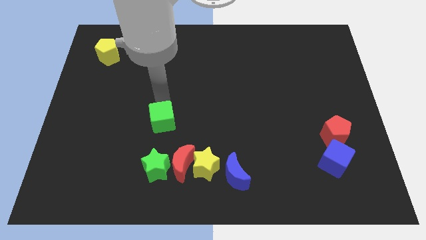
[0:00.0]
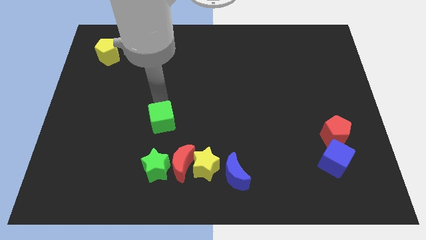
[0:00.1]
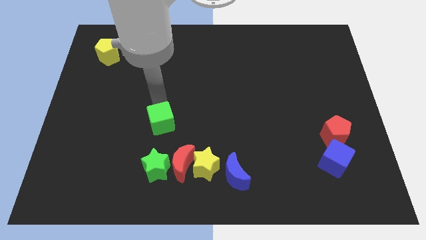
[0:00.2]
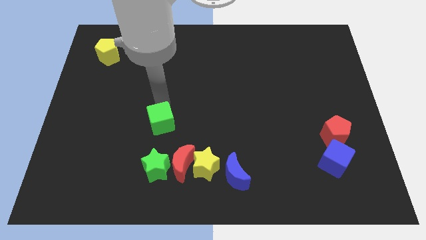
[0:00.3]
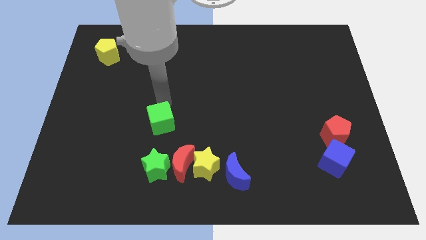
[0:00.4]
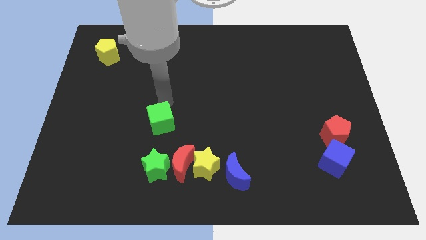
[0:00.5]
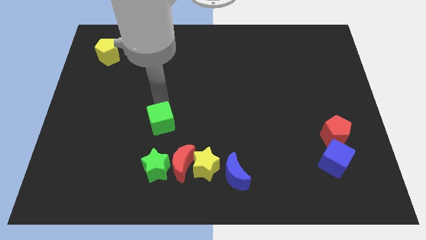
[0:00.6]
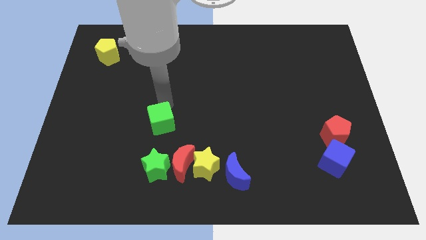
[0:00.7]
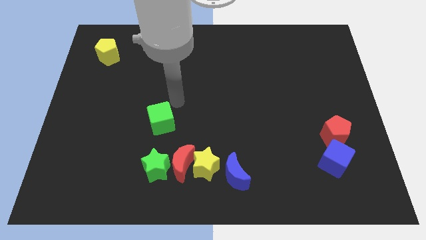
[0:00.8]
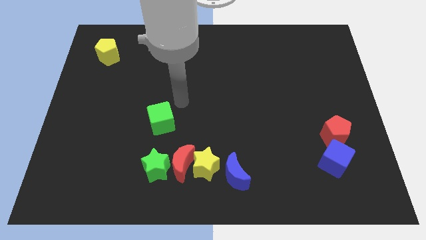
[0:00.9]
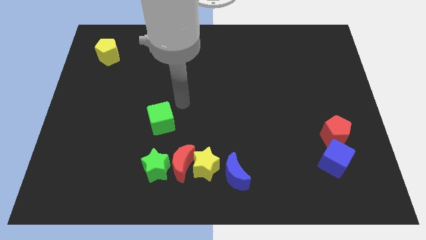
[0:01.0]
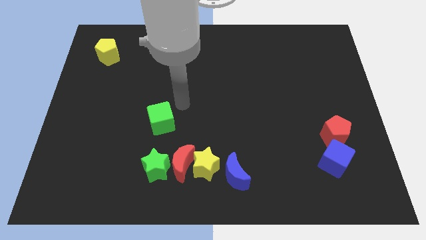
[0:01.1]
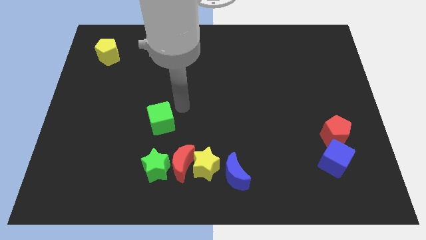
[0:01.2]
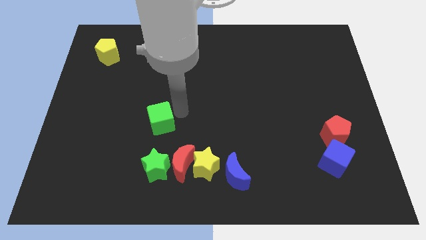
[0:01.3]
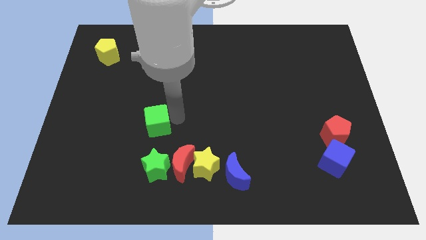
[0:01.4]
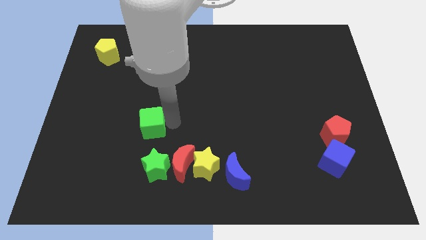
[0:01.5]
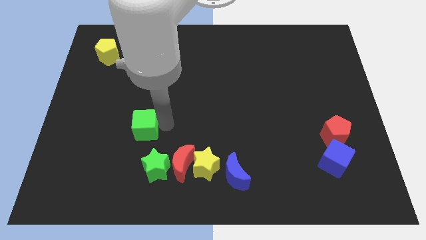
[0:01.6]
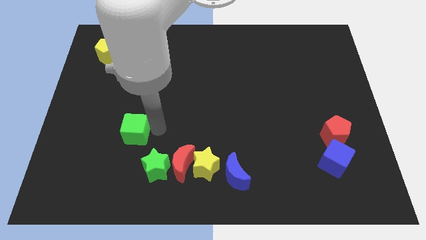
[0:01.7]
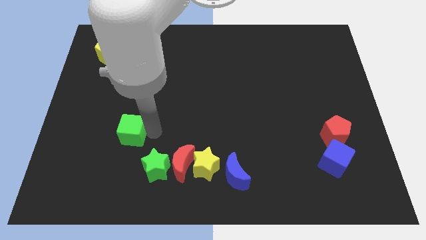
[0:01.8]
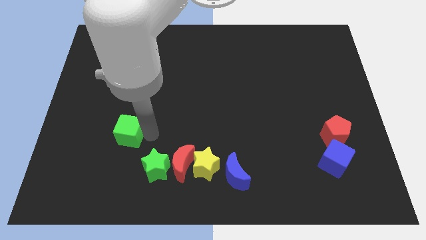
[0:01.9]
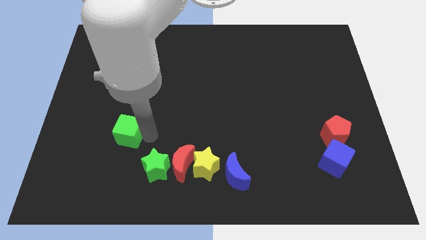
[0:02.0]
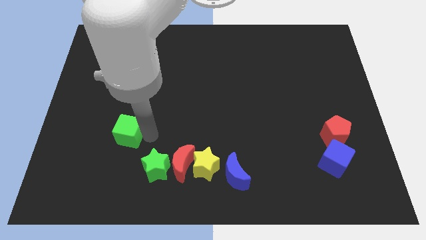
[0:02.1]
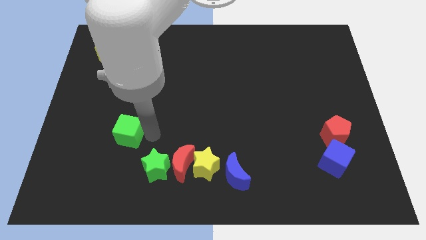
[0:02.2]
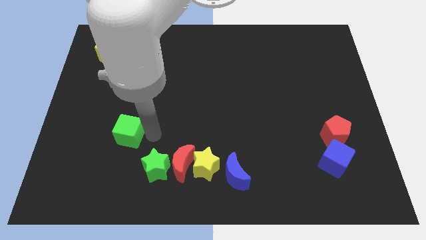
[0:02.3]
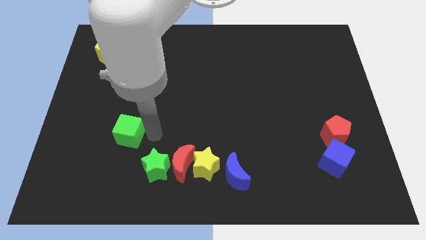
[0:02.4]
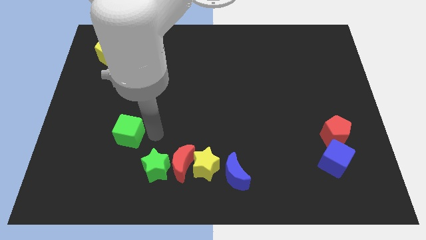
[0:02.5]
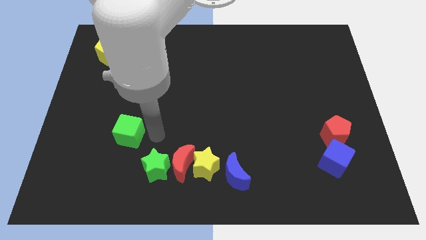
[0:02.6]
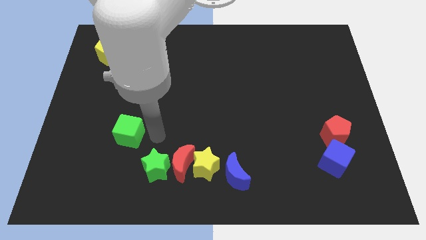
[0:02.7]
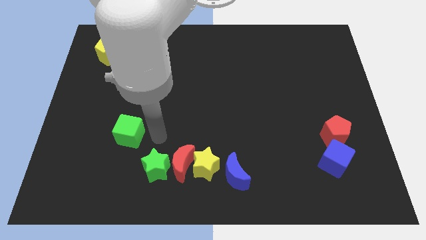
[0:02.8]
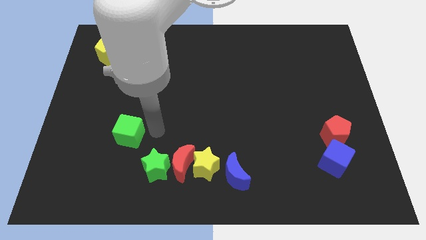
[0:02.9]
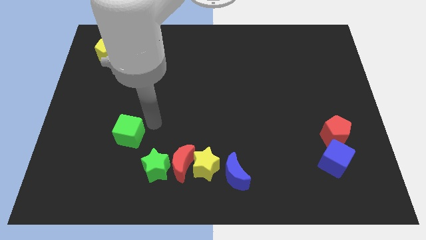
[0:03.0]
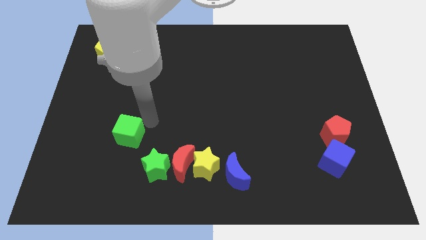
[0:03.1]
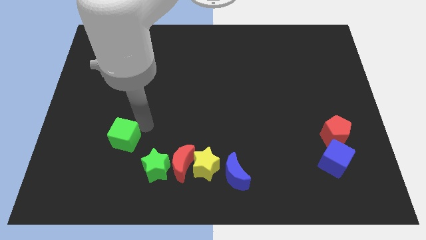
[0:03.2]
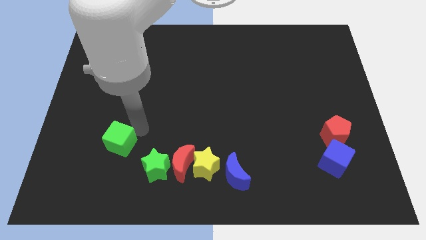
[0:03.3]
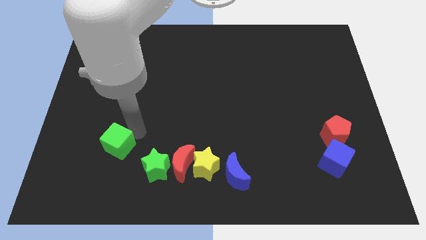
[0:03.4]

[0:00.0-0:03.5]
push the green cube vertical top left to the green star

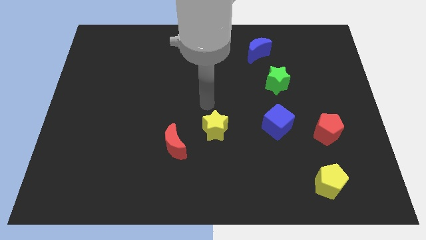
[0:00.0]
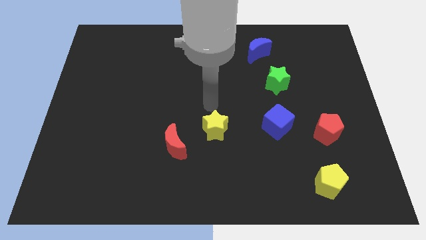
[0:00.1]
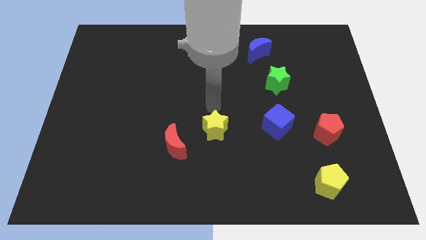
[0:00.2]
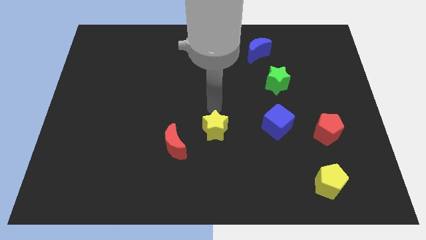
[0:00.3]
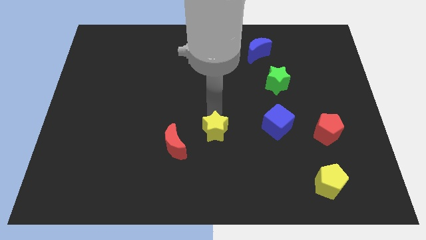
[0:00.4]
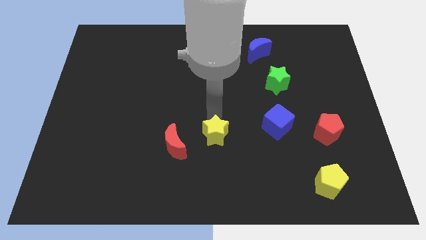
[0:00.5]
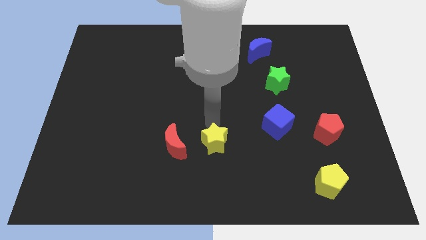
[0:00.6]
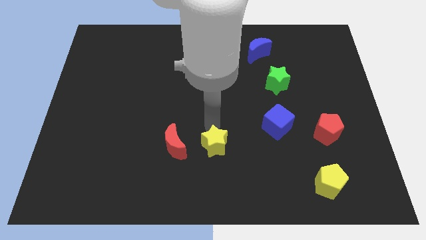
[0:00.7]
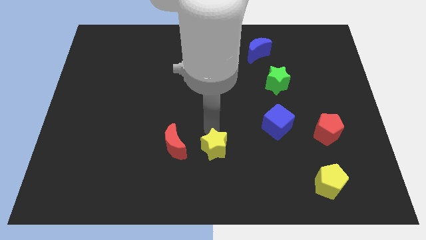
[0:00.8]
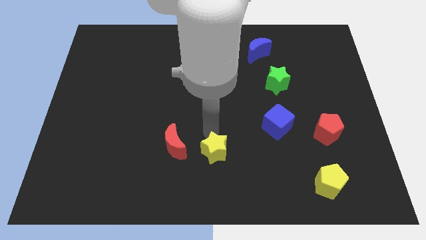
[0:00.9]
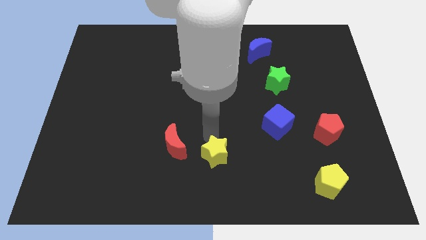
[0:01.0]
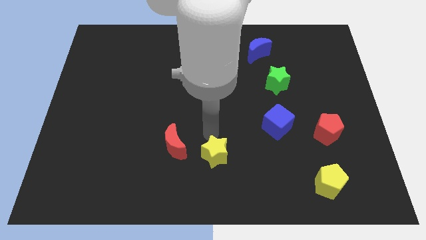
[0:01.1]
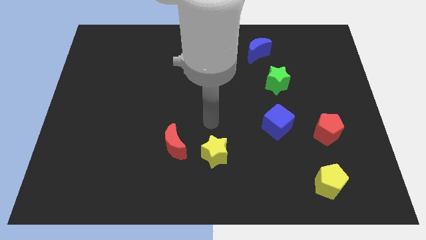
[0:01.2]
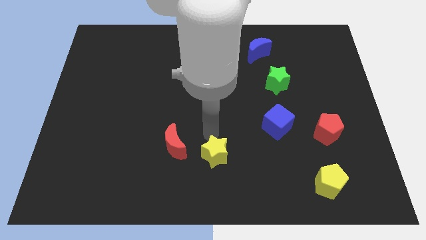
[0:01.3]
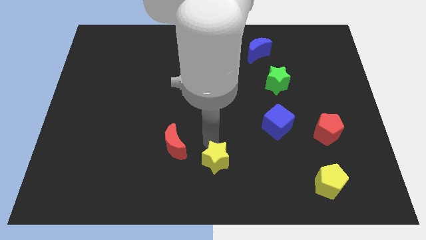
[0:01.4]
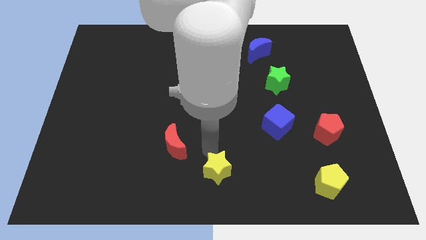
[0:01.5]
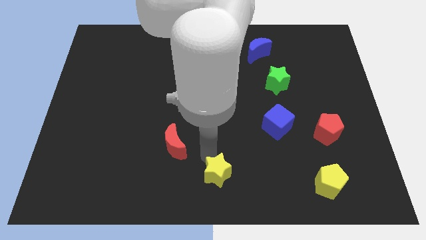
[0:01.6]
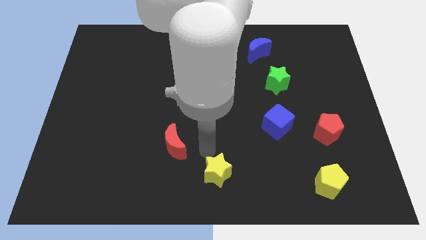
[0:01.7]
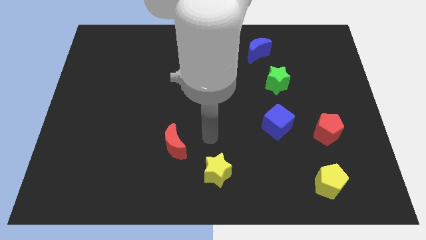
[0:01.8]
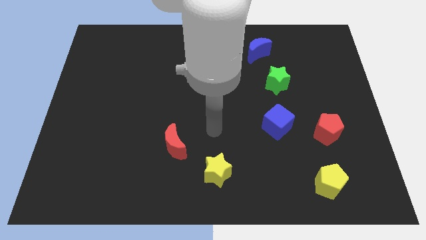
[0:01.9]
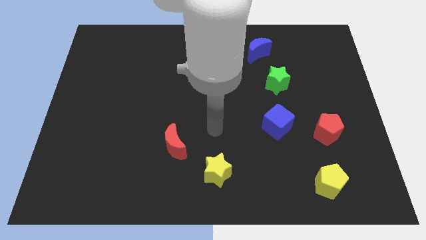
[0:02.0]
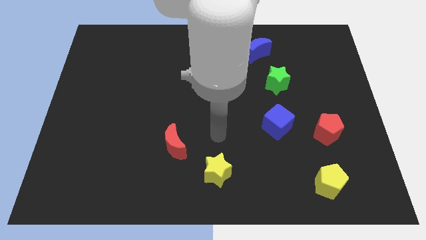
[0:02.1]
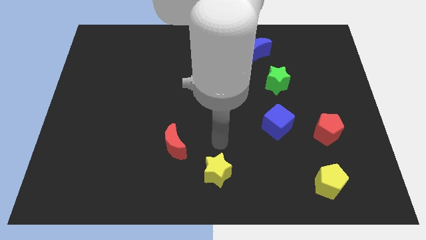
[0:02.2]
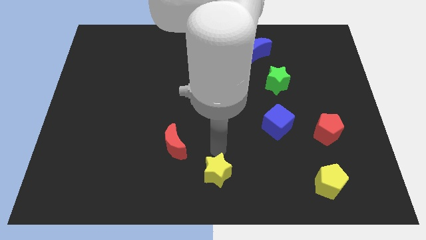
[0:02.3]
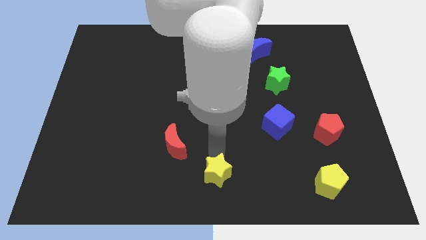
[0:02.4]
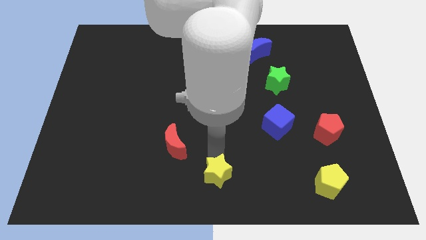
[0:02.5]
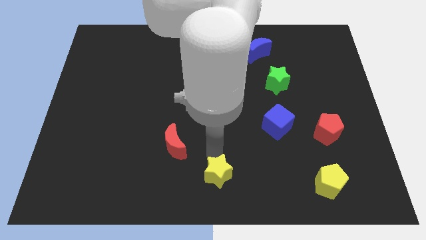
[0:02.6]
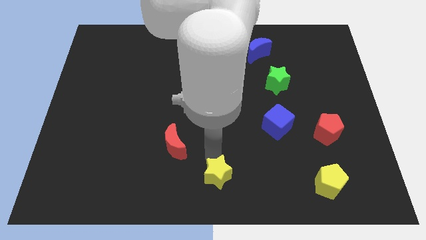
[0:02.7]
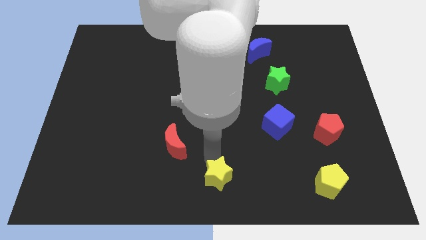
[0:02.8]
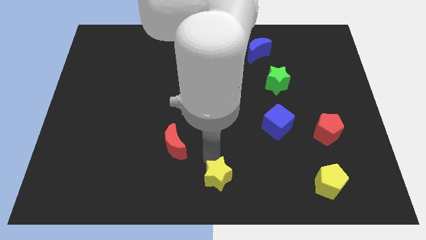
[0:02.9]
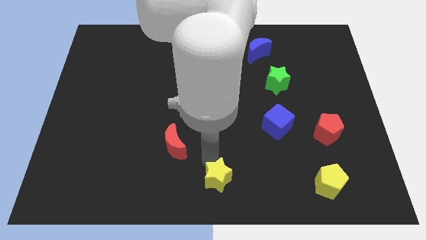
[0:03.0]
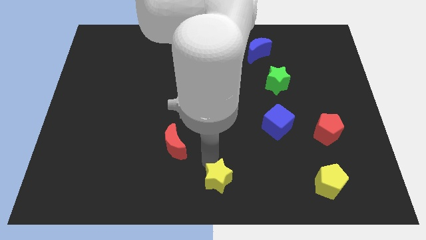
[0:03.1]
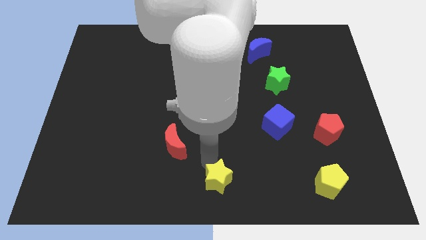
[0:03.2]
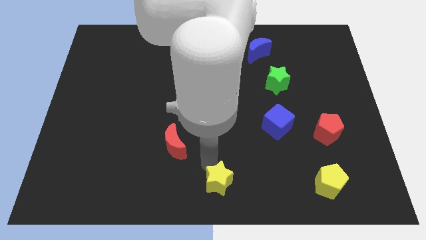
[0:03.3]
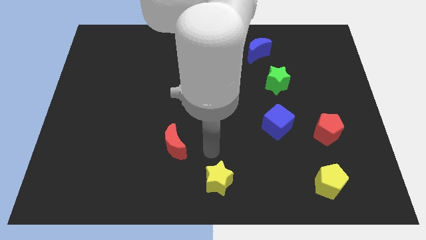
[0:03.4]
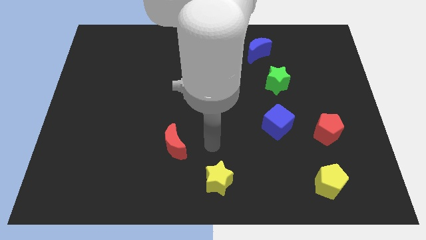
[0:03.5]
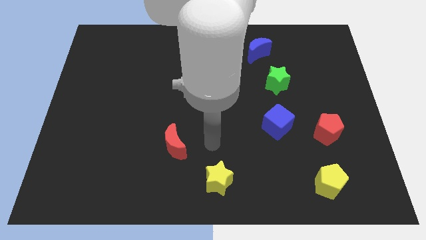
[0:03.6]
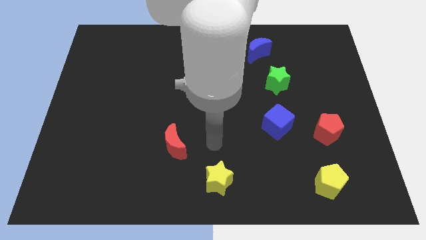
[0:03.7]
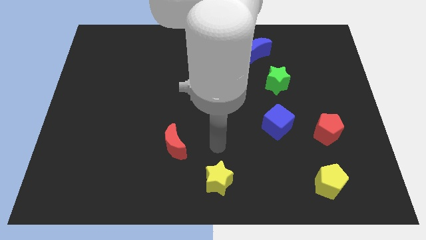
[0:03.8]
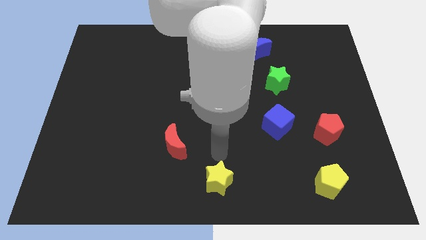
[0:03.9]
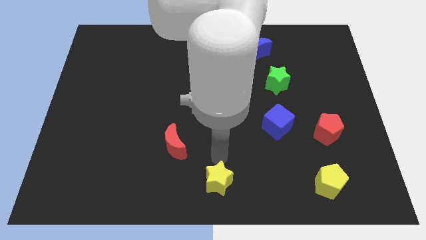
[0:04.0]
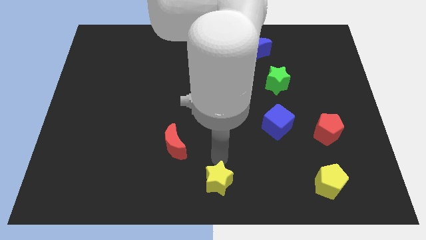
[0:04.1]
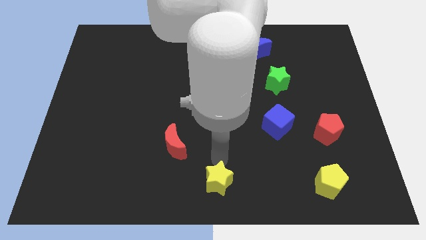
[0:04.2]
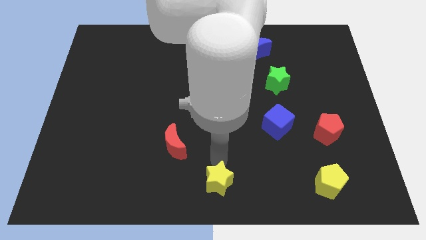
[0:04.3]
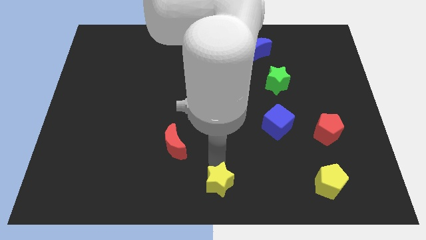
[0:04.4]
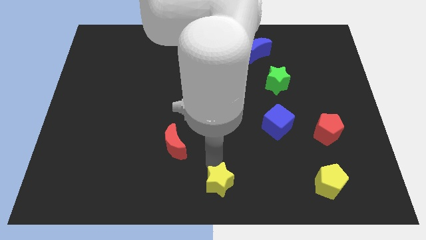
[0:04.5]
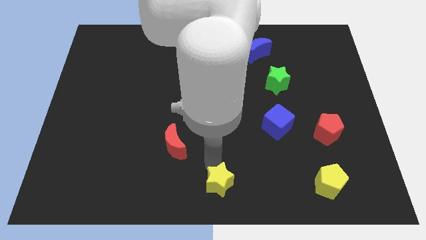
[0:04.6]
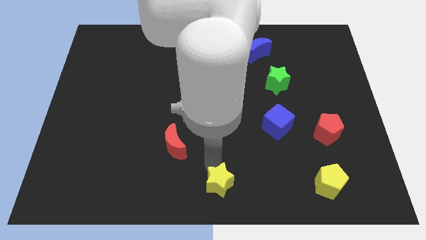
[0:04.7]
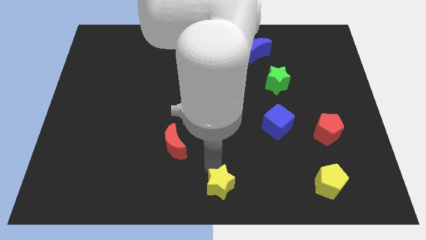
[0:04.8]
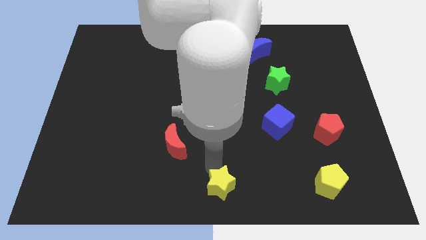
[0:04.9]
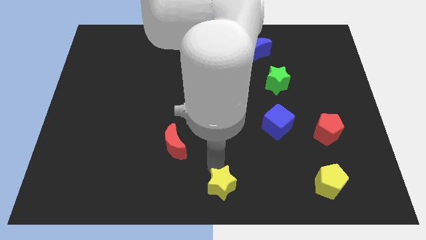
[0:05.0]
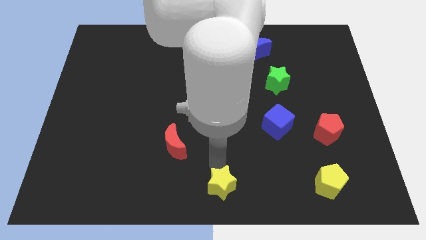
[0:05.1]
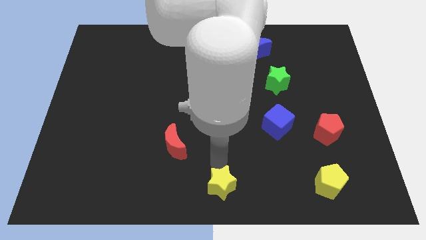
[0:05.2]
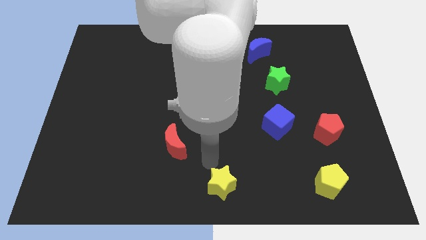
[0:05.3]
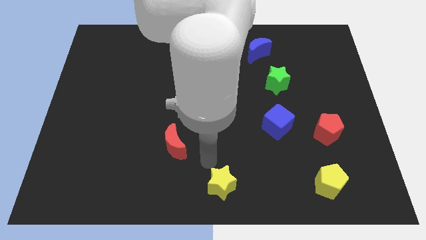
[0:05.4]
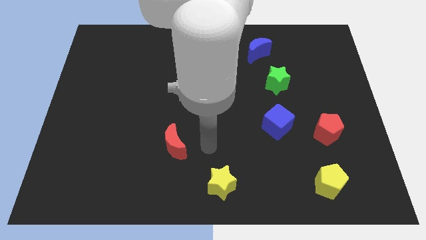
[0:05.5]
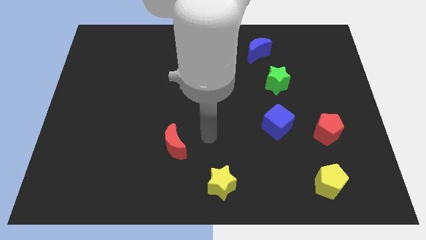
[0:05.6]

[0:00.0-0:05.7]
place the yellow star at the bottom center of the board
